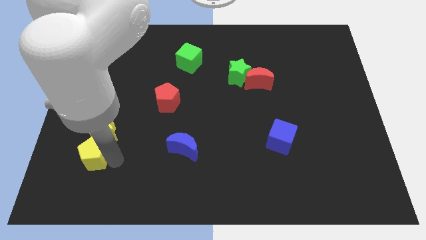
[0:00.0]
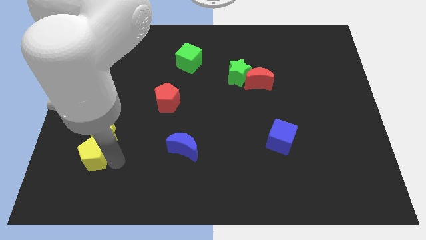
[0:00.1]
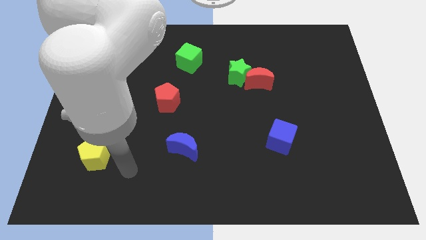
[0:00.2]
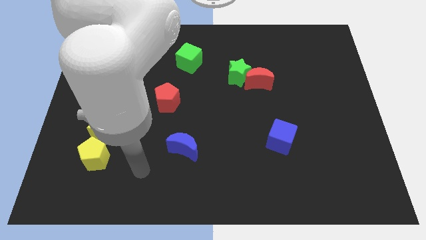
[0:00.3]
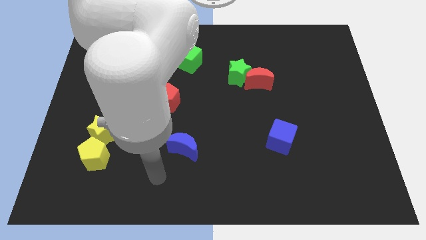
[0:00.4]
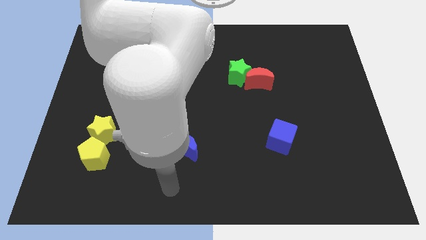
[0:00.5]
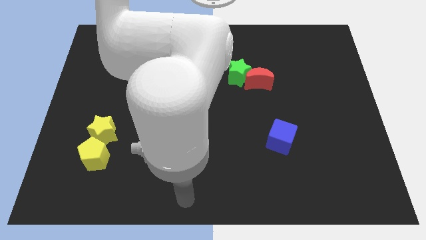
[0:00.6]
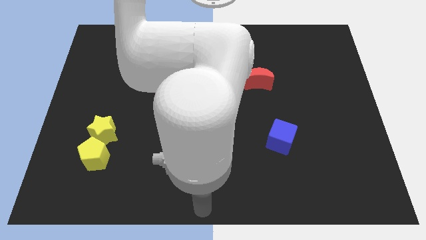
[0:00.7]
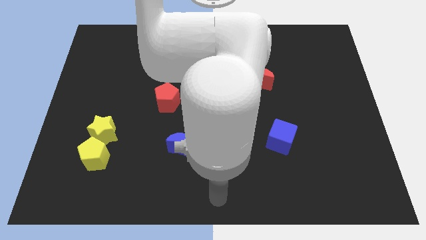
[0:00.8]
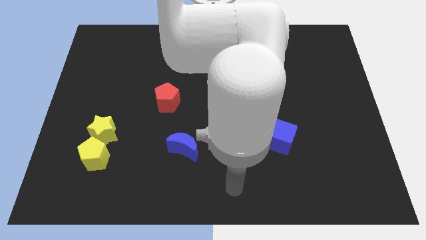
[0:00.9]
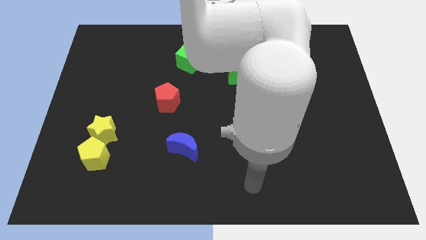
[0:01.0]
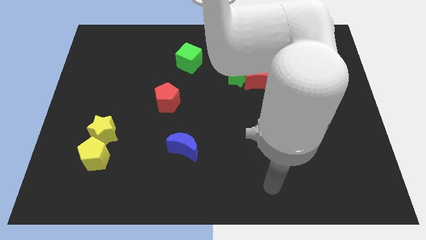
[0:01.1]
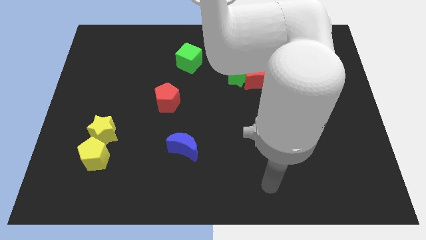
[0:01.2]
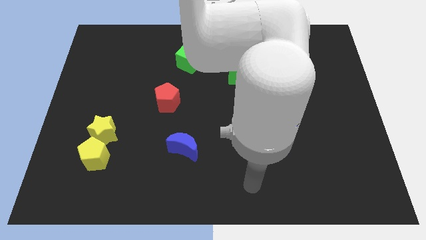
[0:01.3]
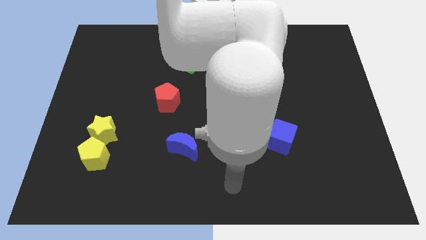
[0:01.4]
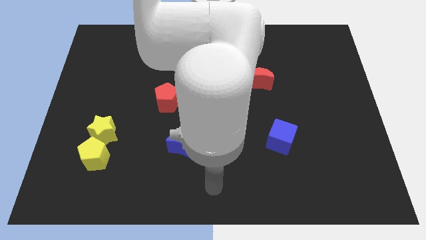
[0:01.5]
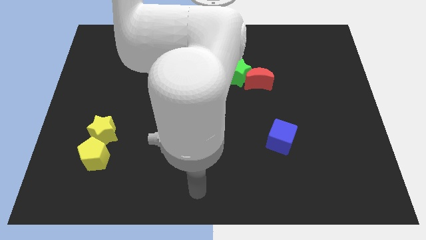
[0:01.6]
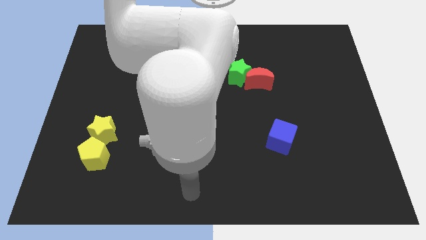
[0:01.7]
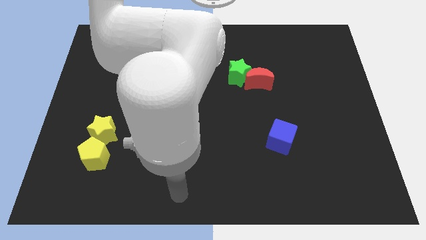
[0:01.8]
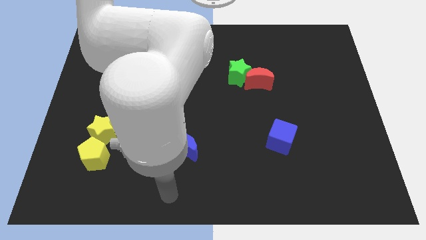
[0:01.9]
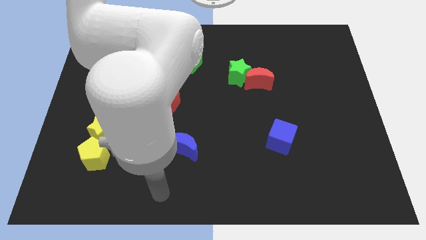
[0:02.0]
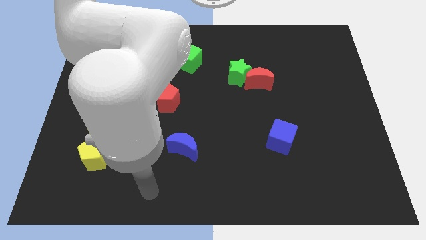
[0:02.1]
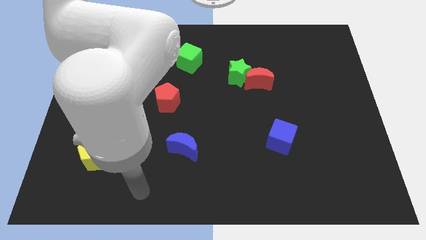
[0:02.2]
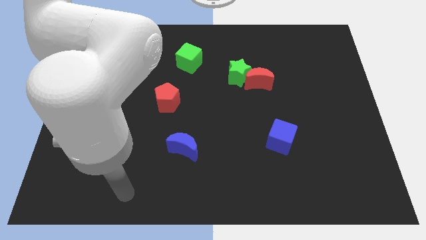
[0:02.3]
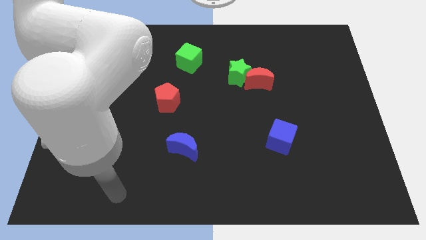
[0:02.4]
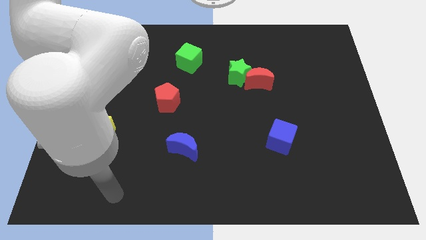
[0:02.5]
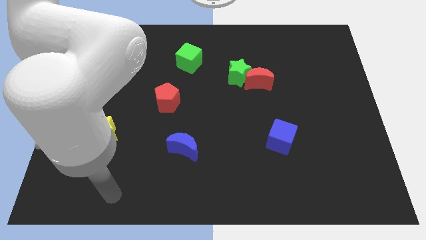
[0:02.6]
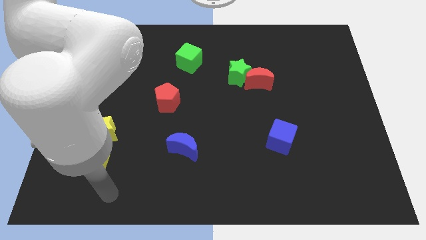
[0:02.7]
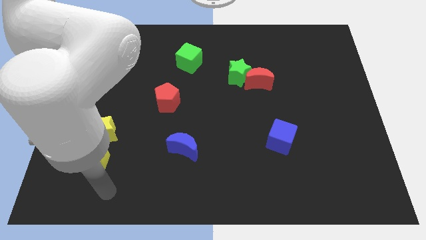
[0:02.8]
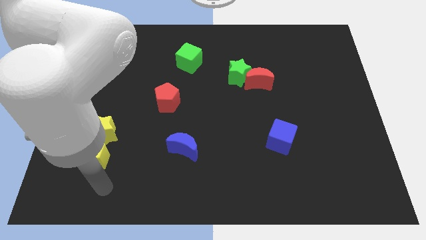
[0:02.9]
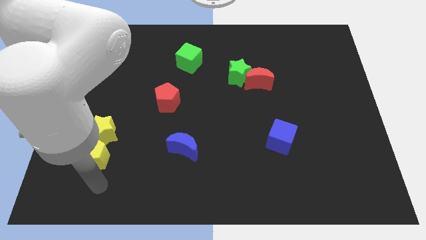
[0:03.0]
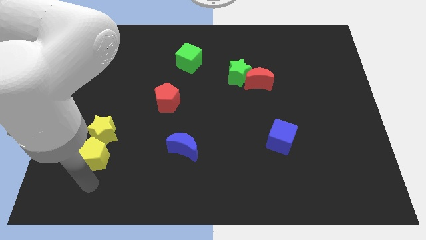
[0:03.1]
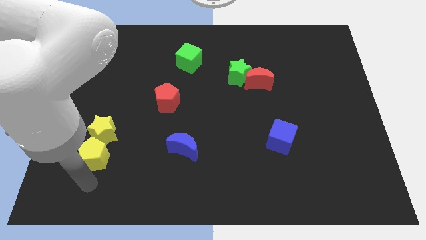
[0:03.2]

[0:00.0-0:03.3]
place your arm at the bottom of the yellow pentagon

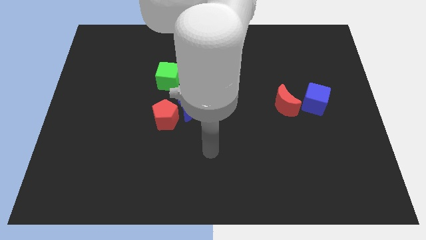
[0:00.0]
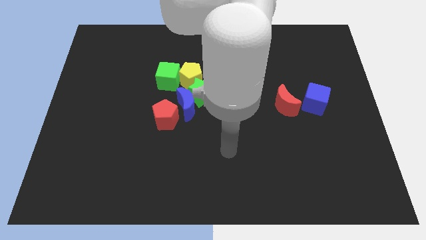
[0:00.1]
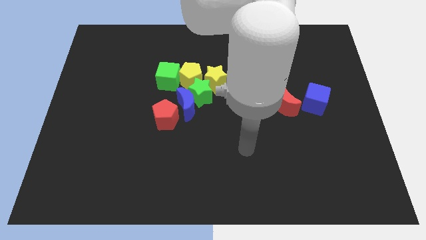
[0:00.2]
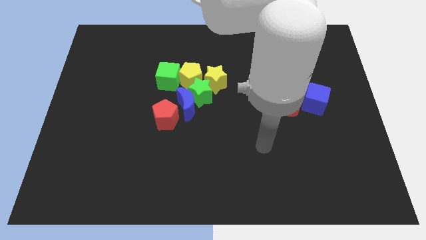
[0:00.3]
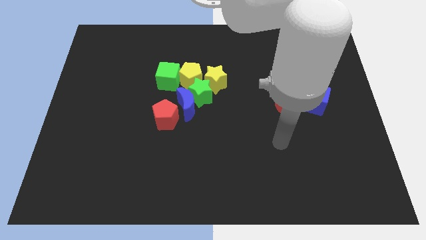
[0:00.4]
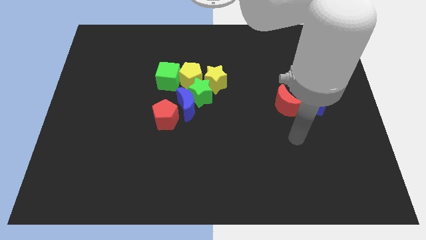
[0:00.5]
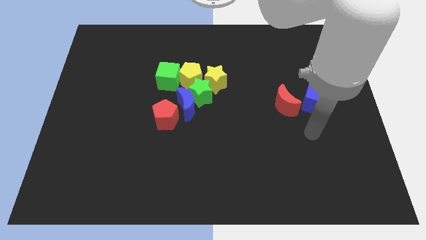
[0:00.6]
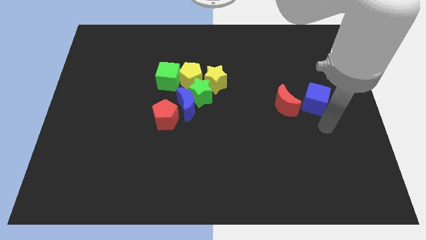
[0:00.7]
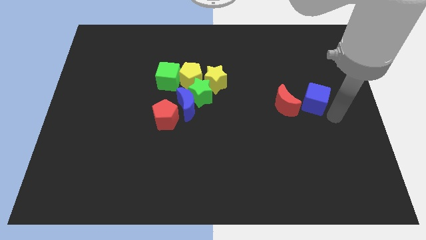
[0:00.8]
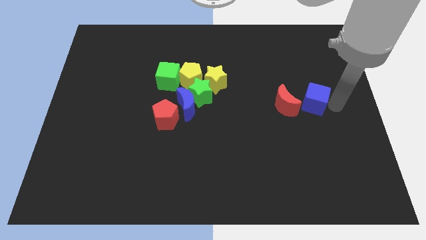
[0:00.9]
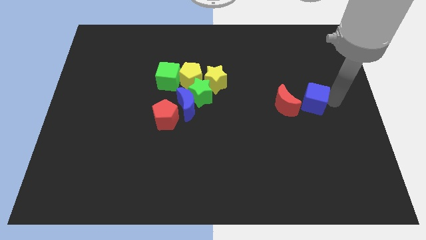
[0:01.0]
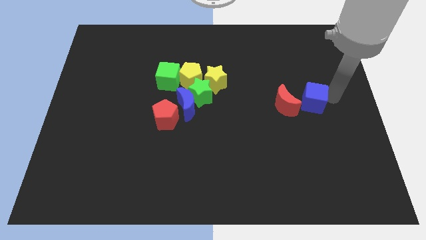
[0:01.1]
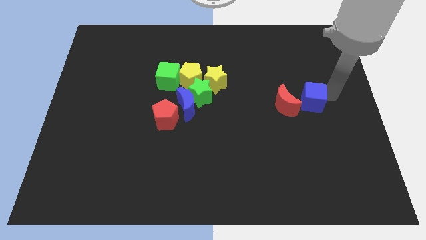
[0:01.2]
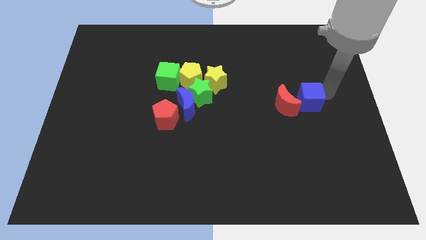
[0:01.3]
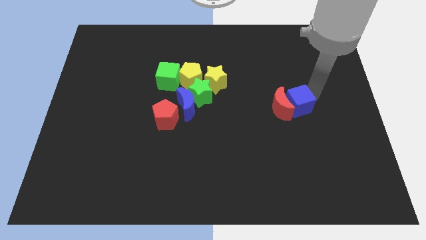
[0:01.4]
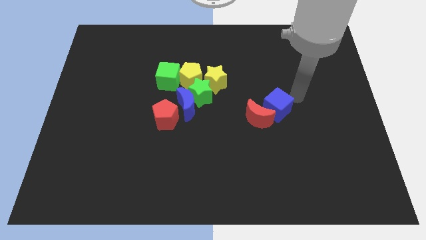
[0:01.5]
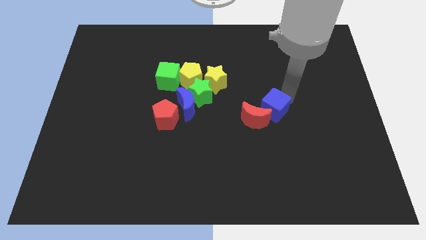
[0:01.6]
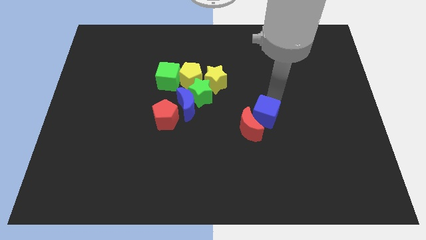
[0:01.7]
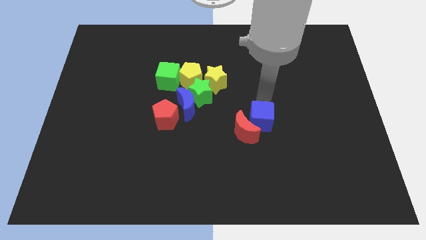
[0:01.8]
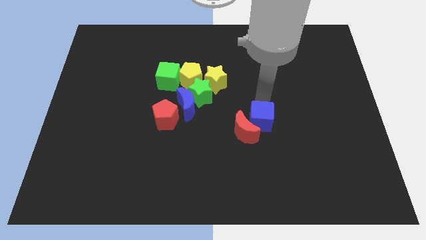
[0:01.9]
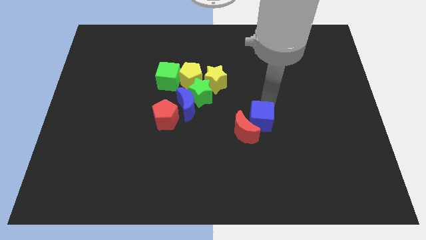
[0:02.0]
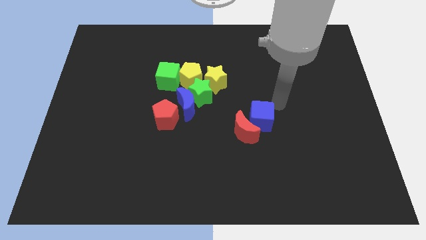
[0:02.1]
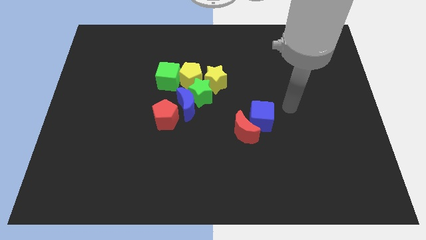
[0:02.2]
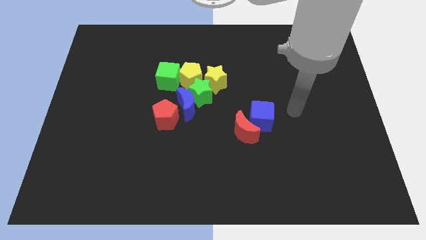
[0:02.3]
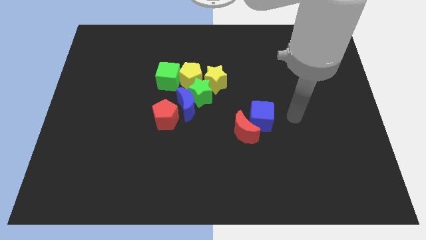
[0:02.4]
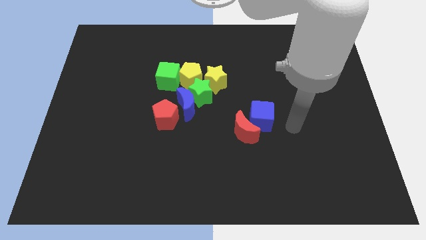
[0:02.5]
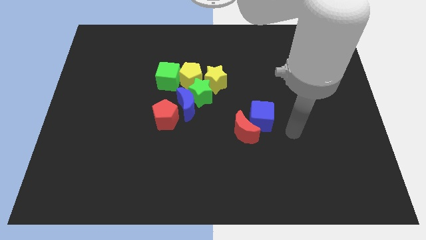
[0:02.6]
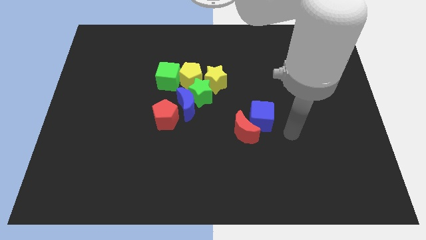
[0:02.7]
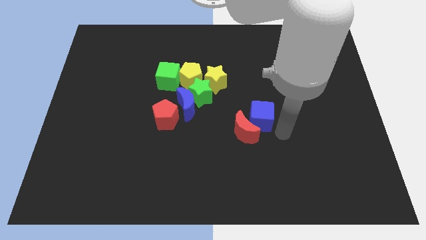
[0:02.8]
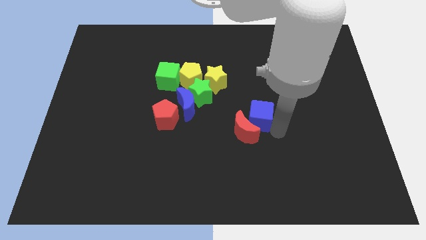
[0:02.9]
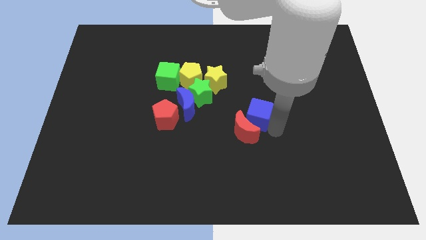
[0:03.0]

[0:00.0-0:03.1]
push the blue cube slightly towards the center of the board

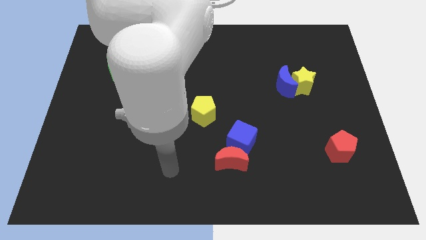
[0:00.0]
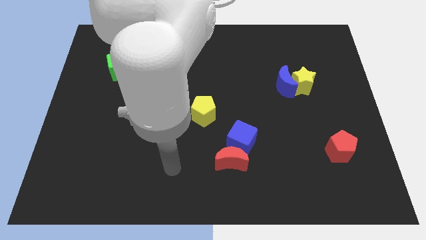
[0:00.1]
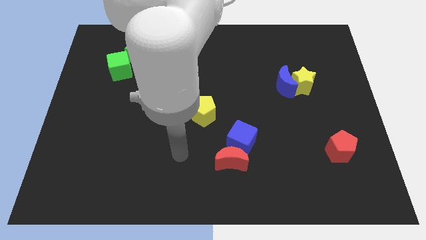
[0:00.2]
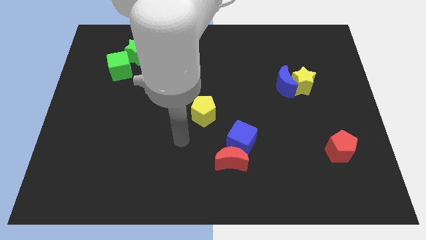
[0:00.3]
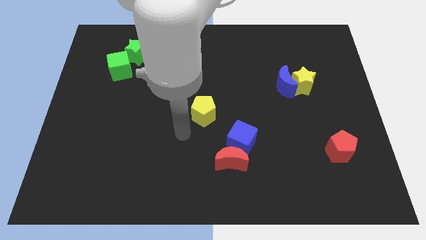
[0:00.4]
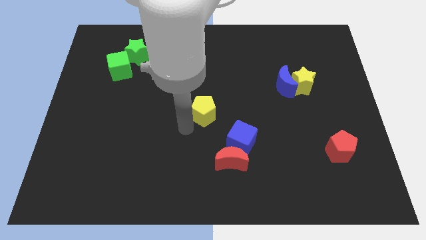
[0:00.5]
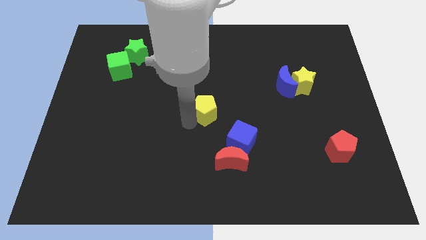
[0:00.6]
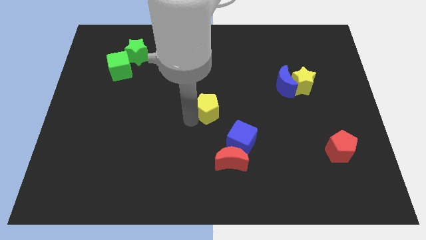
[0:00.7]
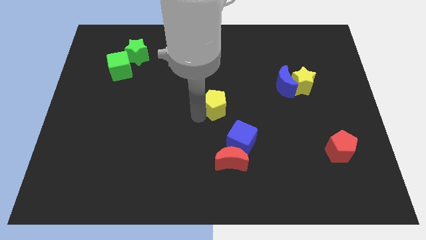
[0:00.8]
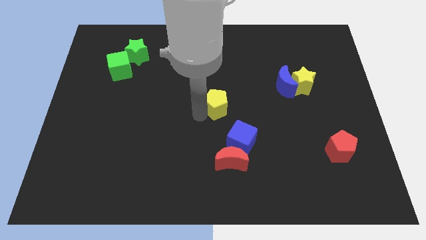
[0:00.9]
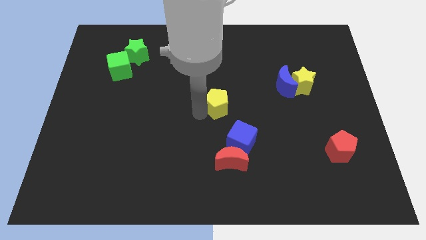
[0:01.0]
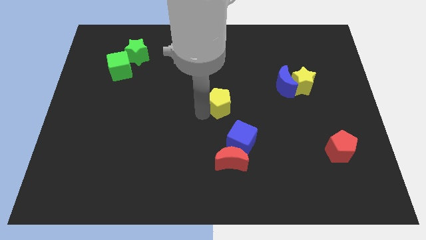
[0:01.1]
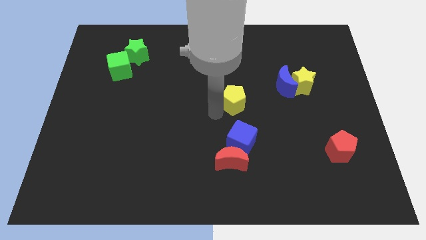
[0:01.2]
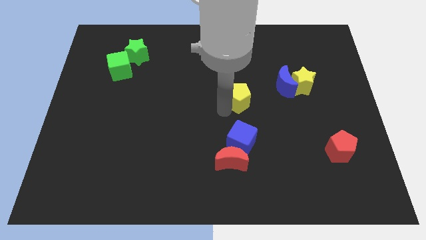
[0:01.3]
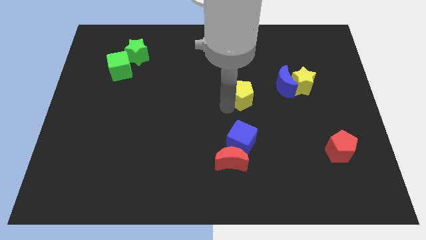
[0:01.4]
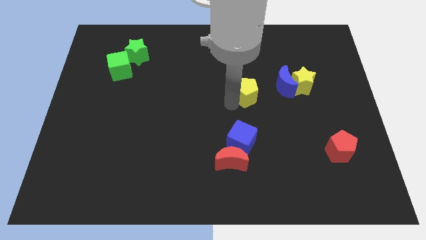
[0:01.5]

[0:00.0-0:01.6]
push the yellow pentagon towards the blue crescent

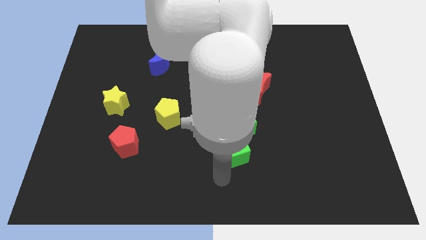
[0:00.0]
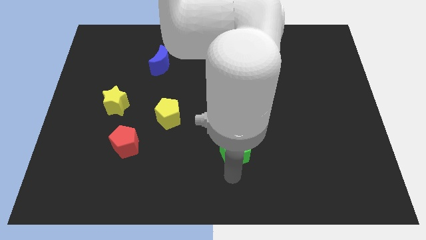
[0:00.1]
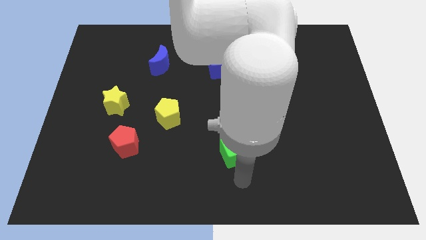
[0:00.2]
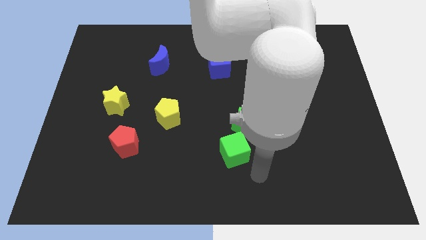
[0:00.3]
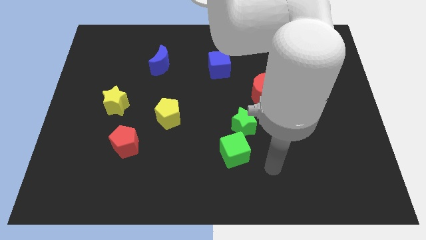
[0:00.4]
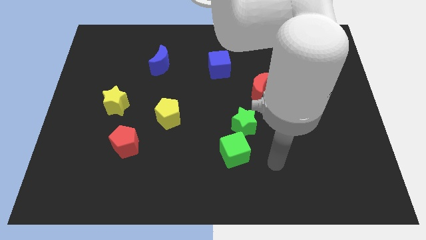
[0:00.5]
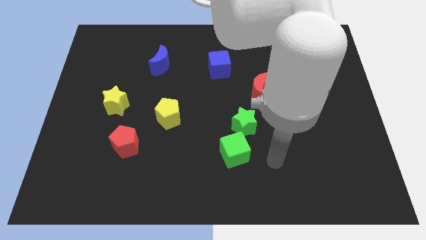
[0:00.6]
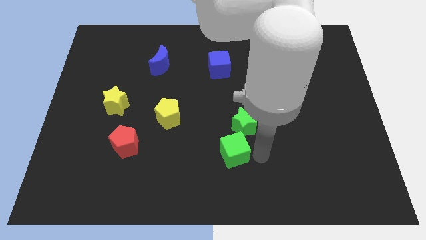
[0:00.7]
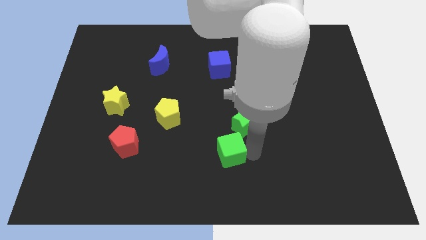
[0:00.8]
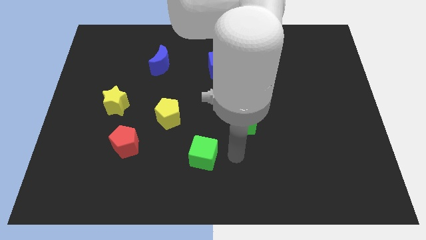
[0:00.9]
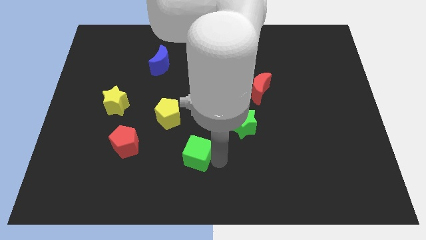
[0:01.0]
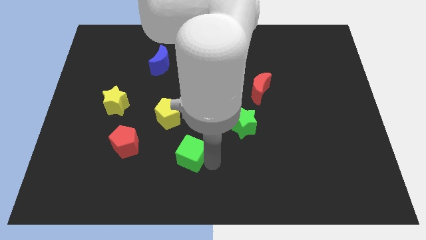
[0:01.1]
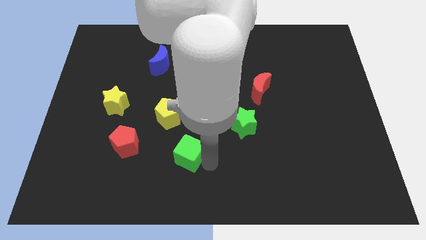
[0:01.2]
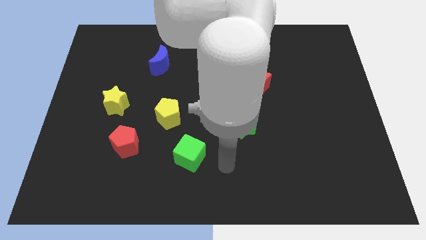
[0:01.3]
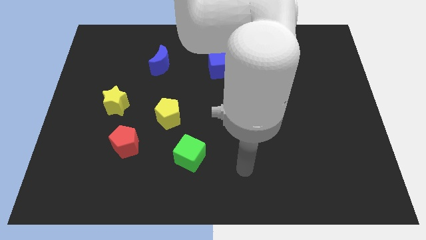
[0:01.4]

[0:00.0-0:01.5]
place the green cube to the right of the red pentagon
